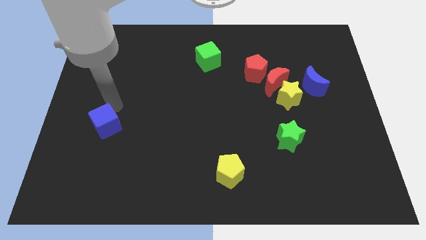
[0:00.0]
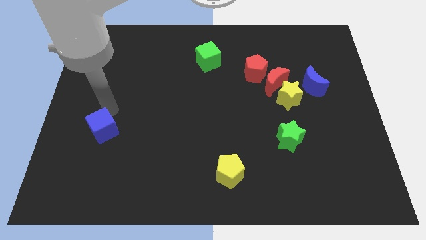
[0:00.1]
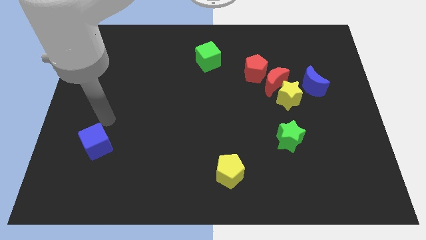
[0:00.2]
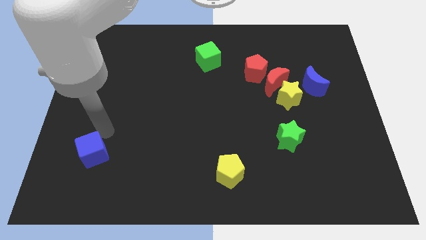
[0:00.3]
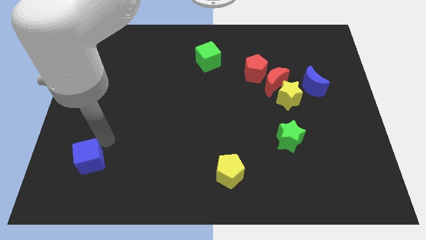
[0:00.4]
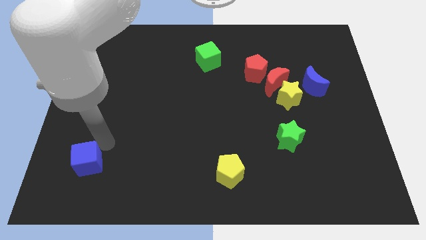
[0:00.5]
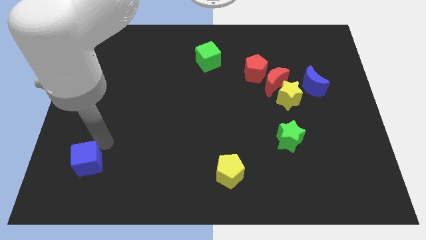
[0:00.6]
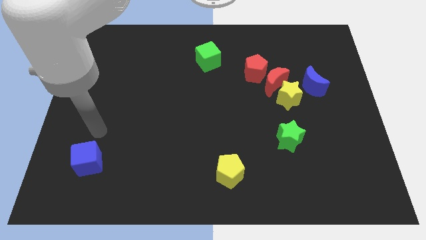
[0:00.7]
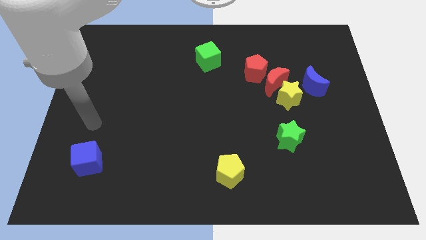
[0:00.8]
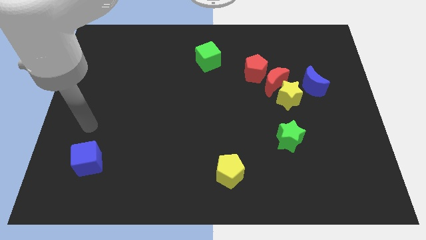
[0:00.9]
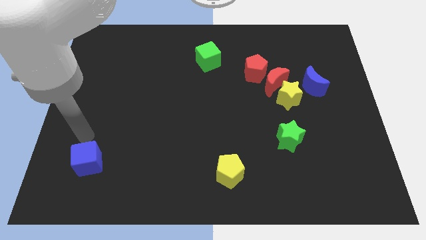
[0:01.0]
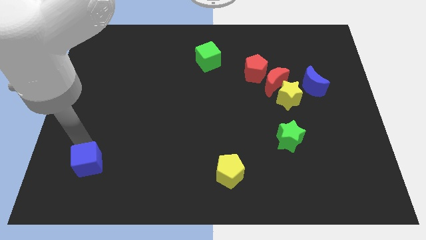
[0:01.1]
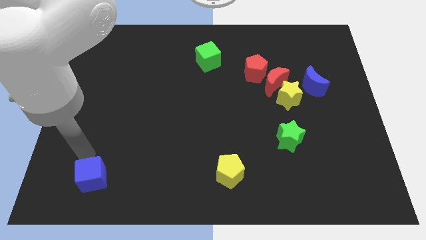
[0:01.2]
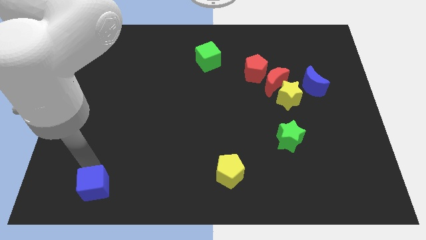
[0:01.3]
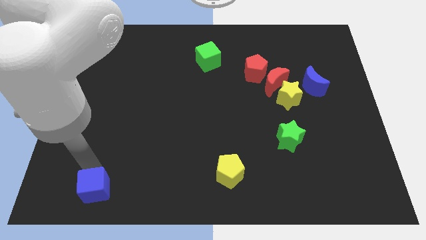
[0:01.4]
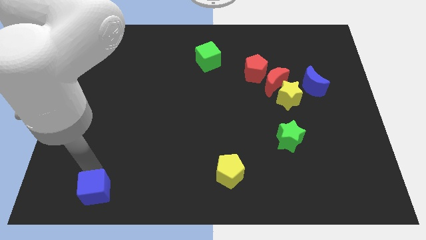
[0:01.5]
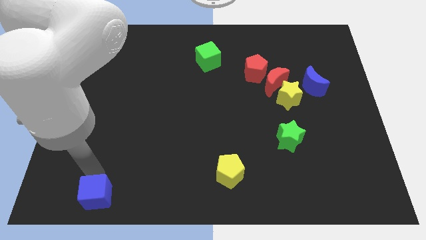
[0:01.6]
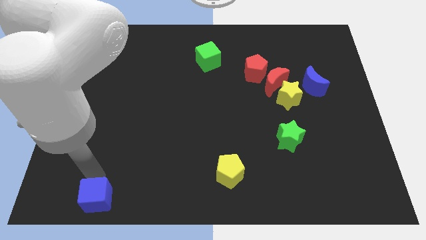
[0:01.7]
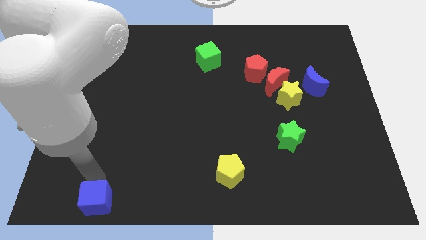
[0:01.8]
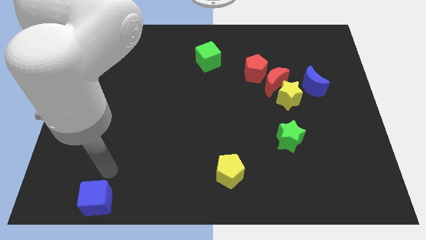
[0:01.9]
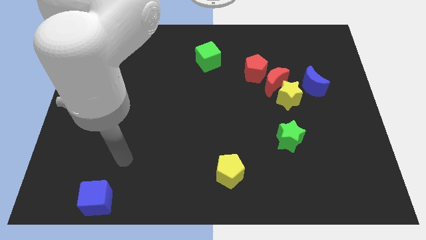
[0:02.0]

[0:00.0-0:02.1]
push the blue cube to the bottom left of the board

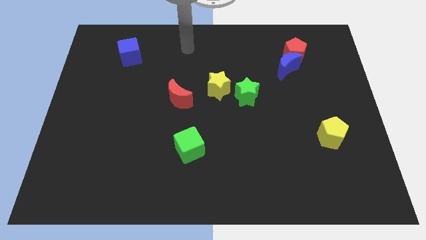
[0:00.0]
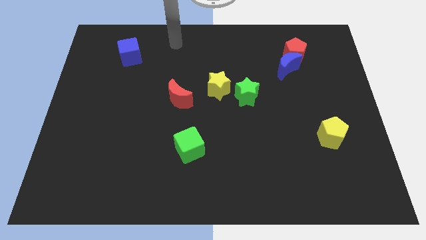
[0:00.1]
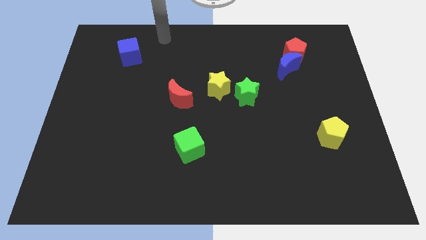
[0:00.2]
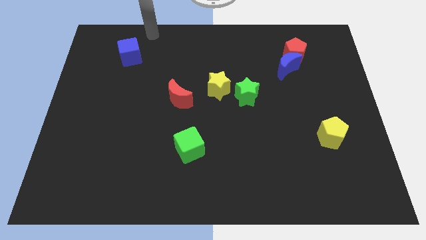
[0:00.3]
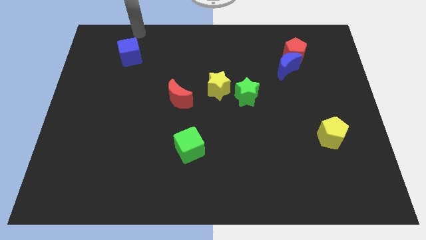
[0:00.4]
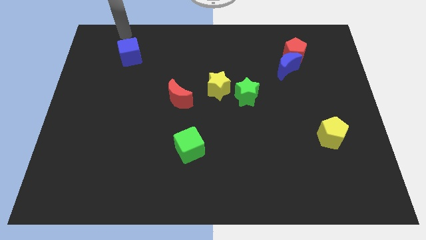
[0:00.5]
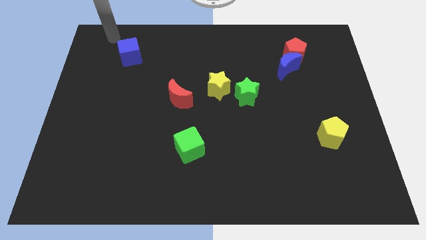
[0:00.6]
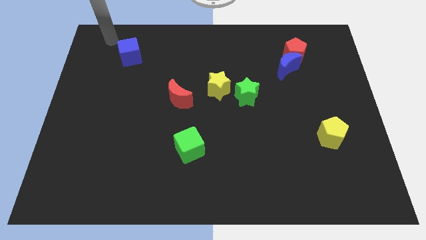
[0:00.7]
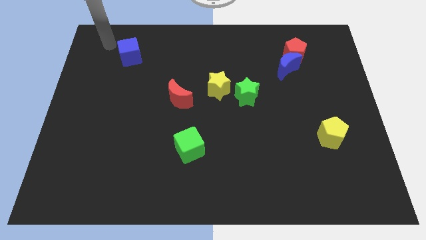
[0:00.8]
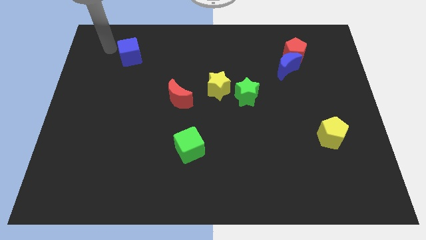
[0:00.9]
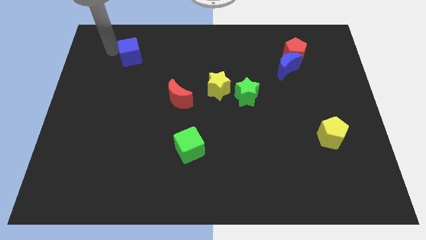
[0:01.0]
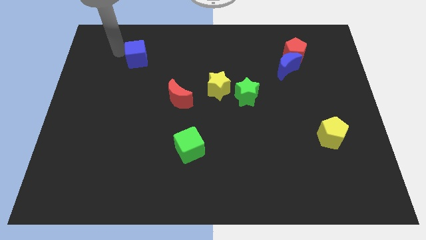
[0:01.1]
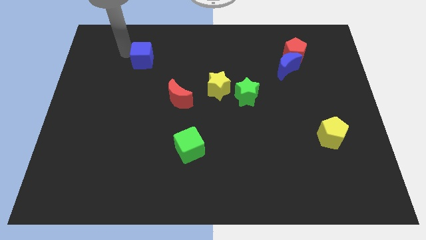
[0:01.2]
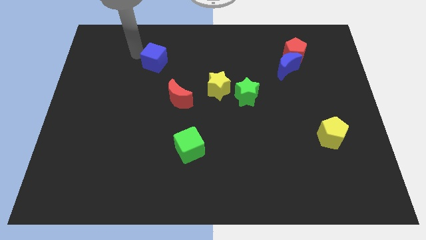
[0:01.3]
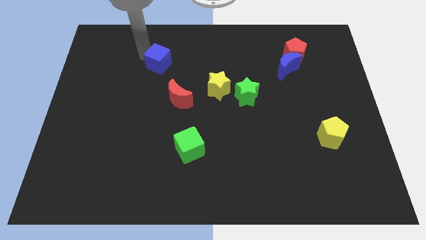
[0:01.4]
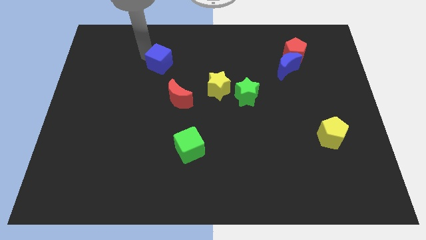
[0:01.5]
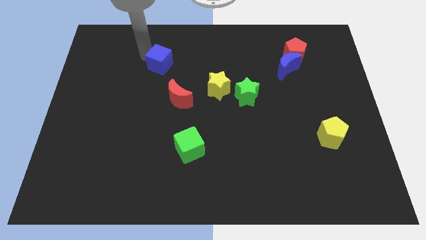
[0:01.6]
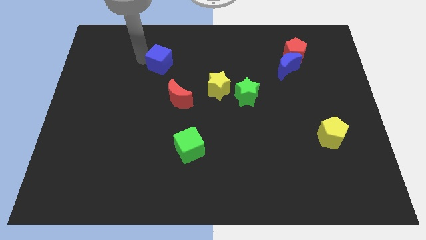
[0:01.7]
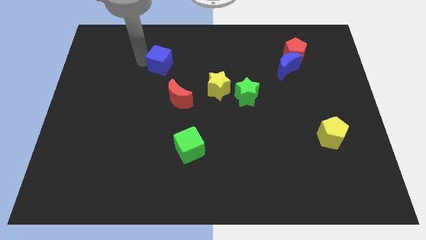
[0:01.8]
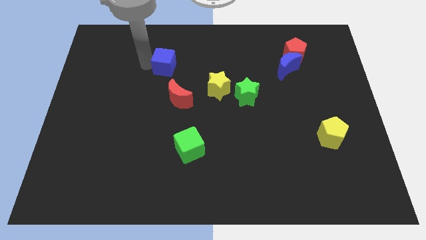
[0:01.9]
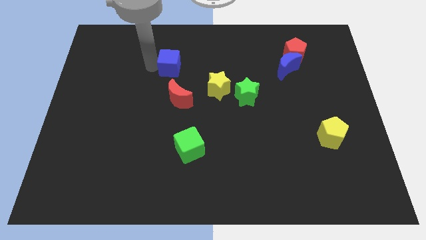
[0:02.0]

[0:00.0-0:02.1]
move the blue block towards the right side of the board

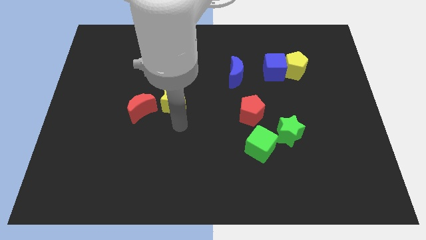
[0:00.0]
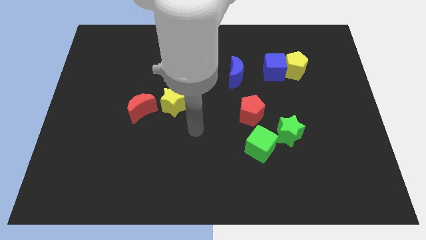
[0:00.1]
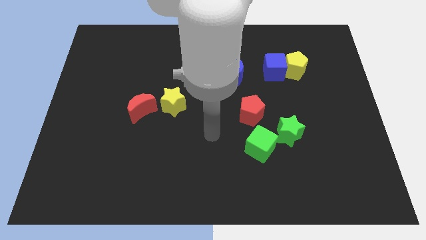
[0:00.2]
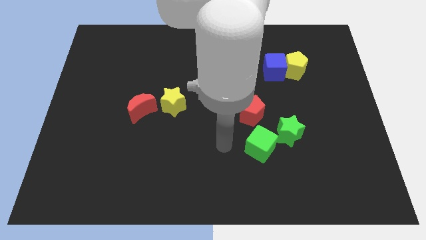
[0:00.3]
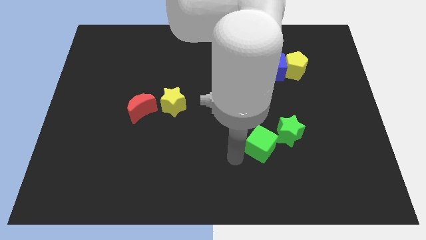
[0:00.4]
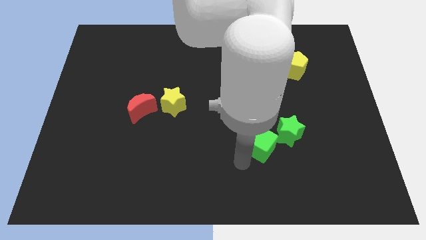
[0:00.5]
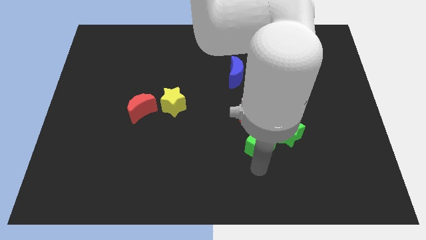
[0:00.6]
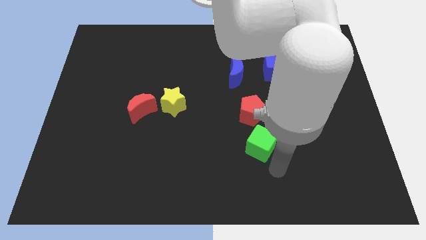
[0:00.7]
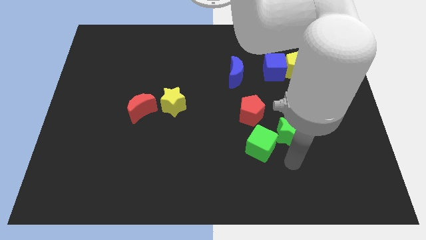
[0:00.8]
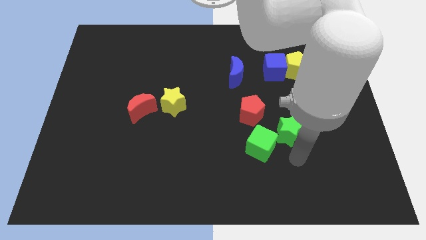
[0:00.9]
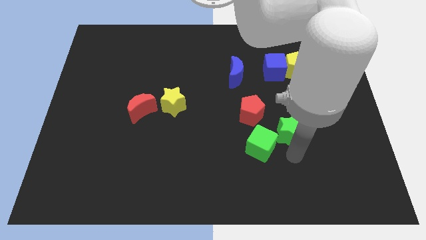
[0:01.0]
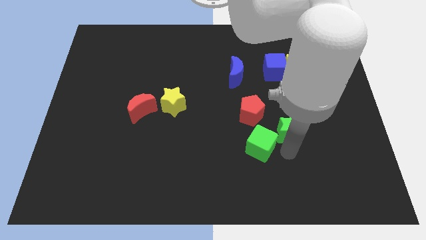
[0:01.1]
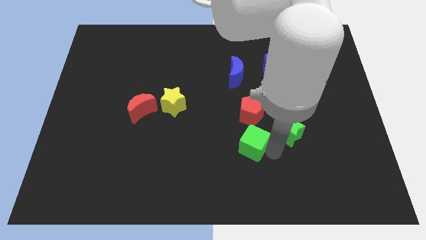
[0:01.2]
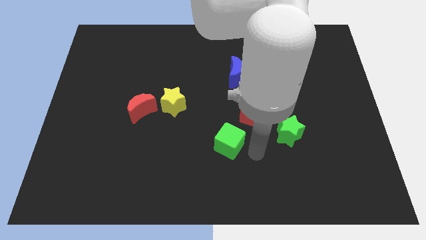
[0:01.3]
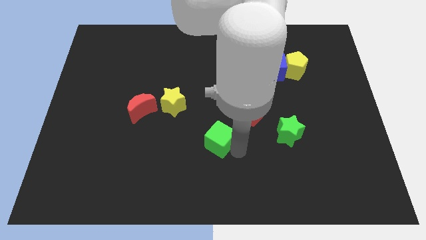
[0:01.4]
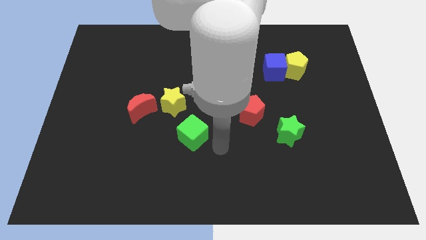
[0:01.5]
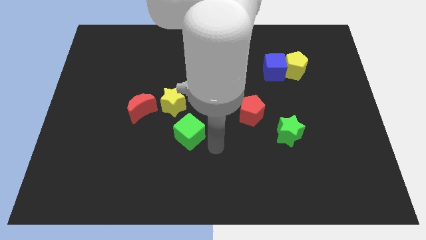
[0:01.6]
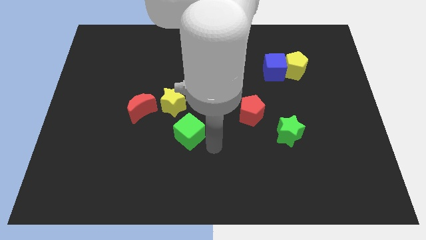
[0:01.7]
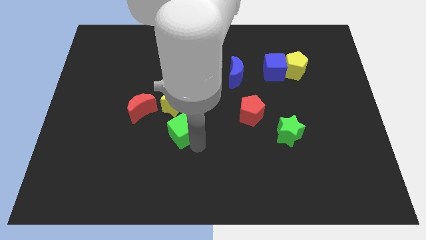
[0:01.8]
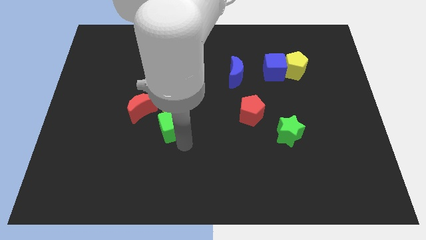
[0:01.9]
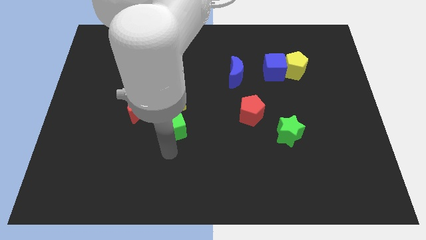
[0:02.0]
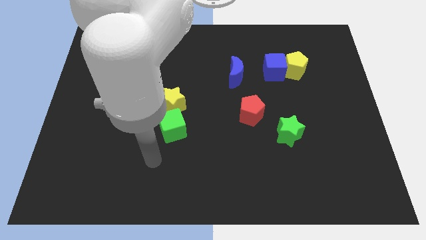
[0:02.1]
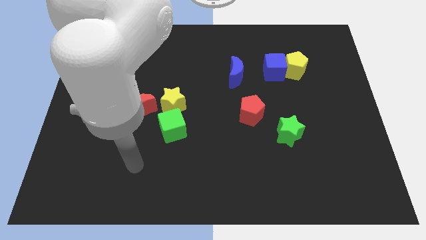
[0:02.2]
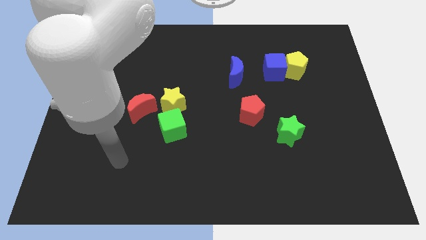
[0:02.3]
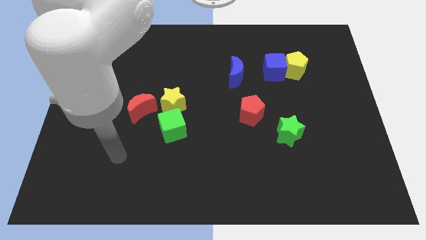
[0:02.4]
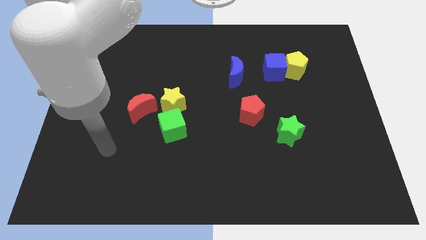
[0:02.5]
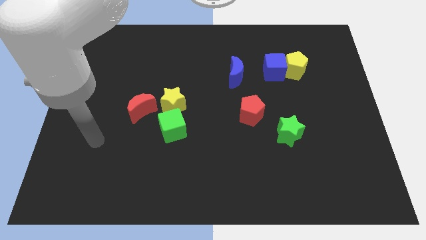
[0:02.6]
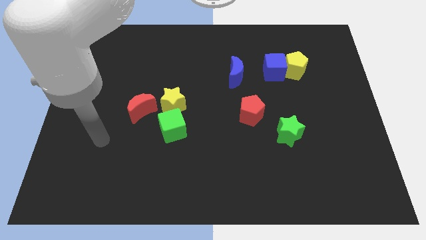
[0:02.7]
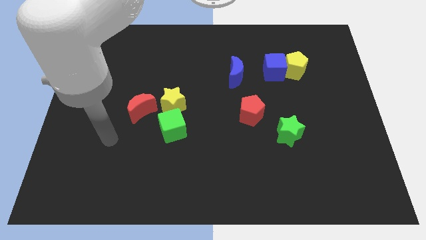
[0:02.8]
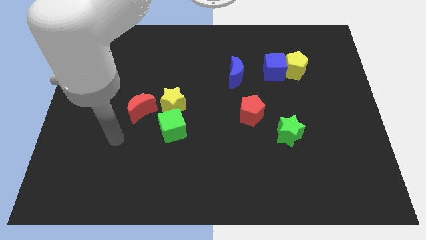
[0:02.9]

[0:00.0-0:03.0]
separate the green cube from the green star

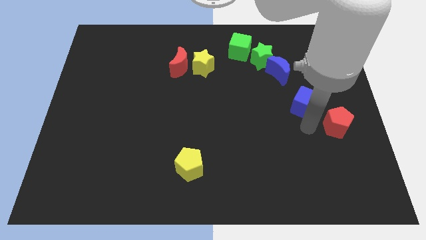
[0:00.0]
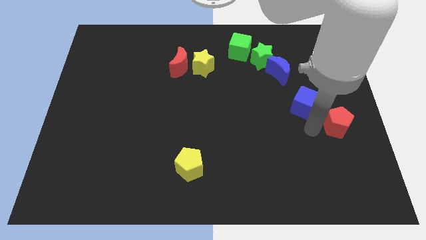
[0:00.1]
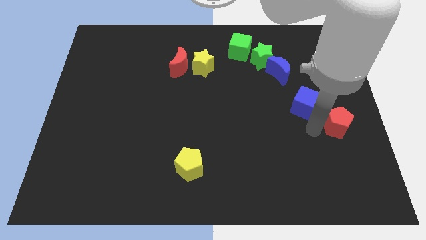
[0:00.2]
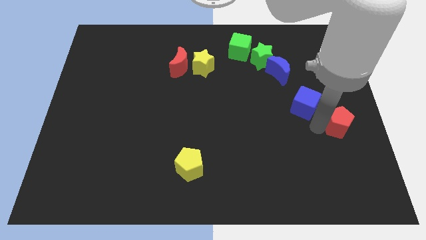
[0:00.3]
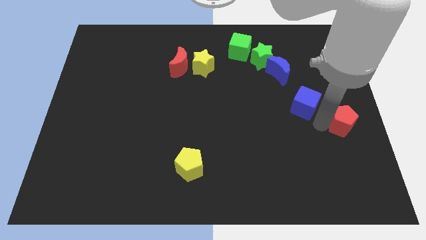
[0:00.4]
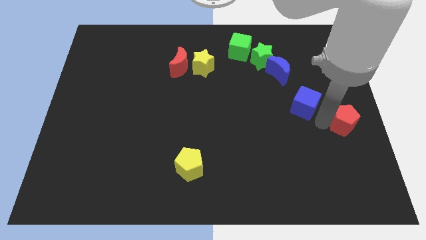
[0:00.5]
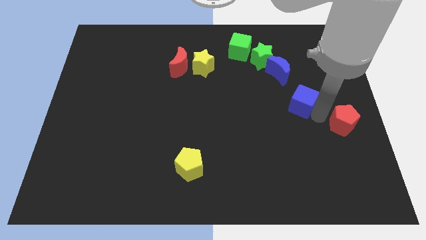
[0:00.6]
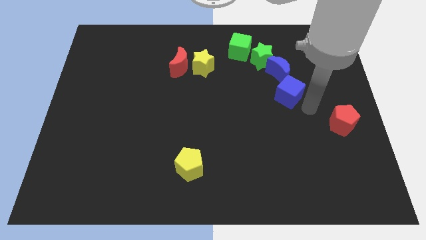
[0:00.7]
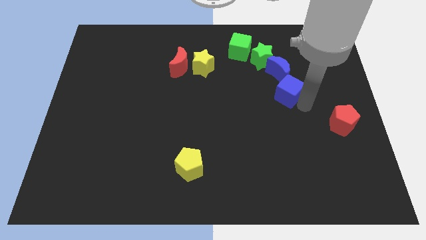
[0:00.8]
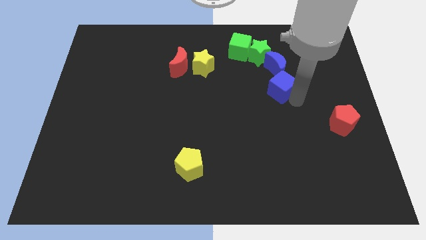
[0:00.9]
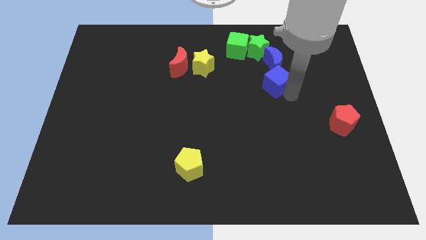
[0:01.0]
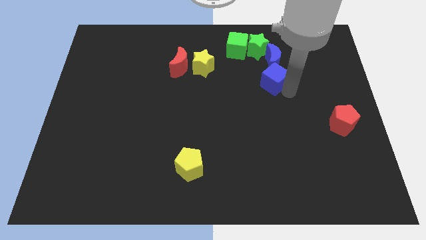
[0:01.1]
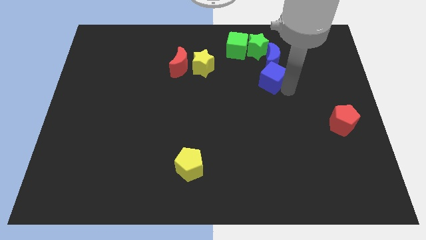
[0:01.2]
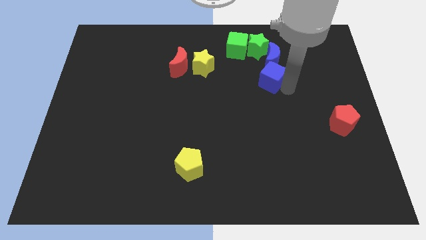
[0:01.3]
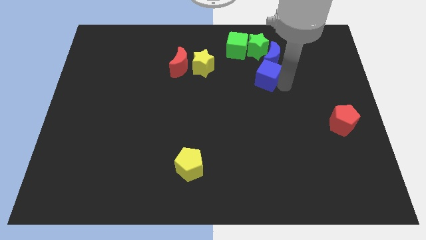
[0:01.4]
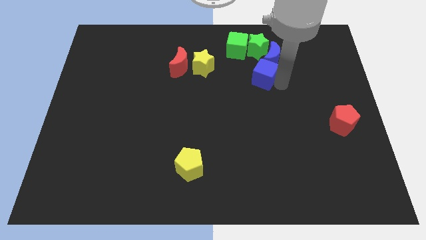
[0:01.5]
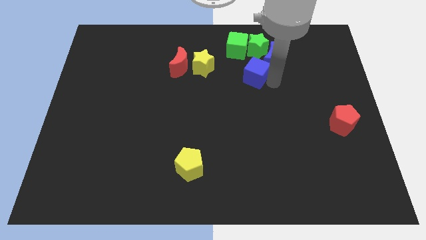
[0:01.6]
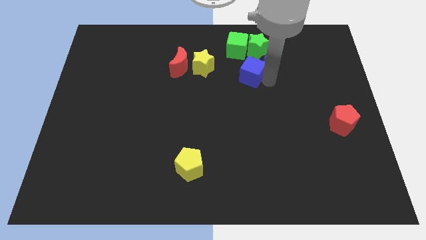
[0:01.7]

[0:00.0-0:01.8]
push the blue moon with the blue cube

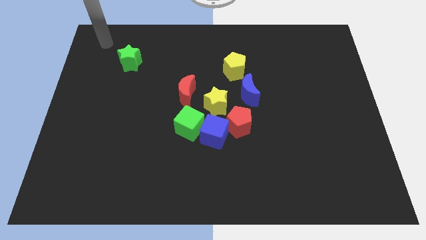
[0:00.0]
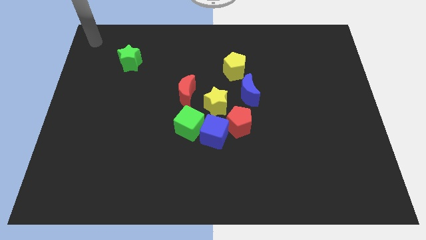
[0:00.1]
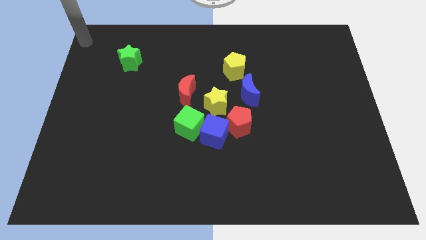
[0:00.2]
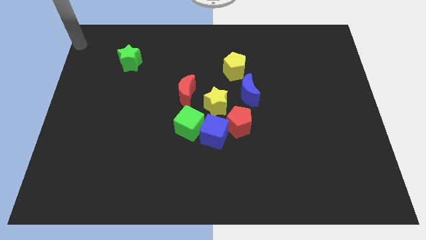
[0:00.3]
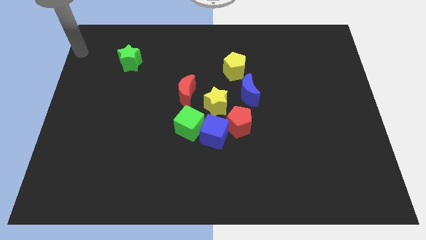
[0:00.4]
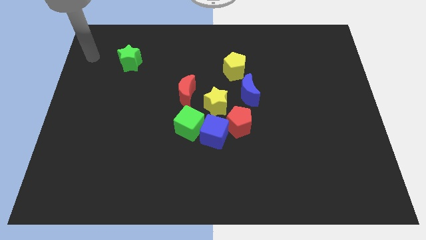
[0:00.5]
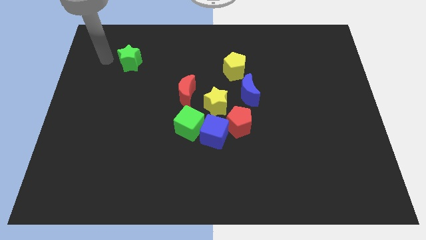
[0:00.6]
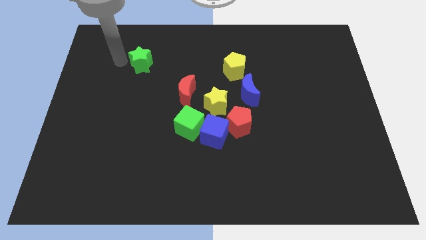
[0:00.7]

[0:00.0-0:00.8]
move your hand away from the green star
